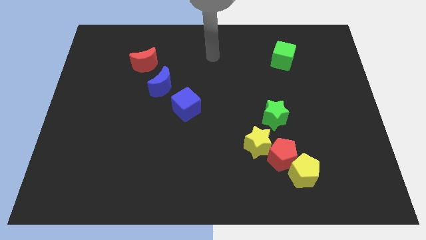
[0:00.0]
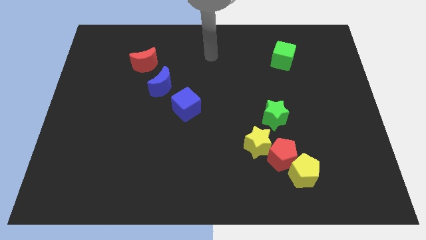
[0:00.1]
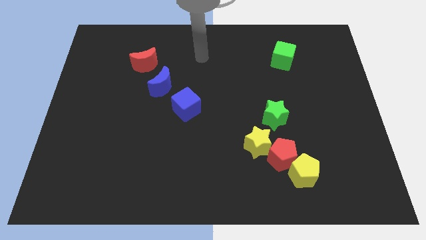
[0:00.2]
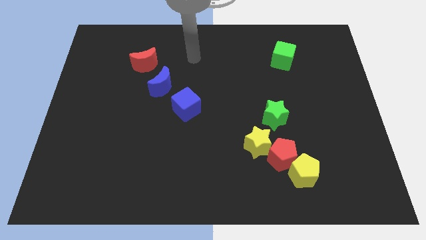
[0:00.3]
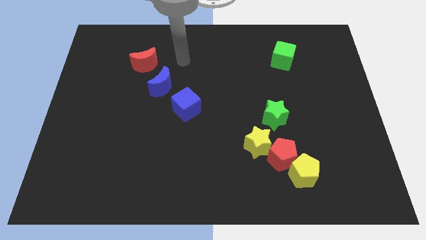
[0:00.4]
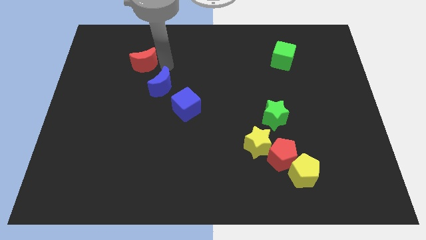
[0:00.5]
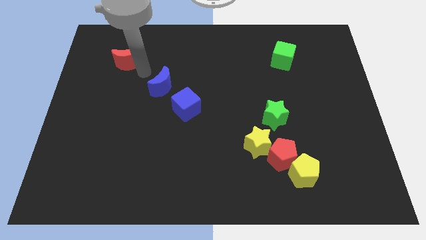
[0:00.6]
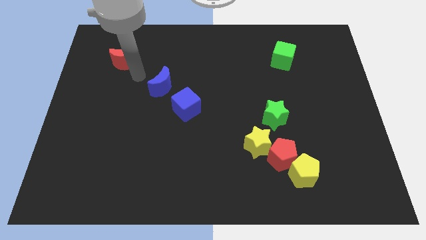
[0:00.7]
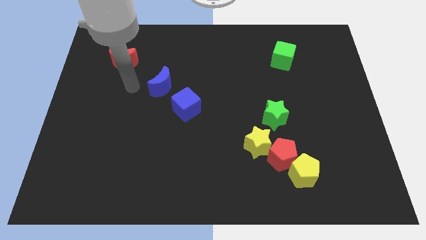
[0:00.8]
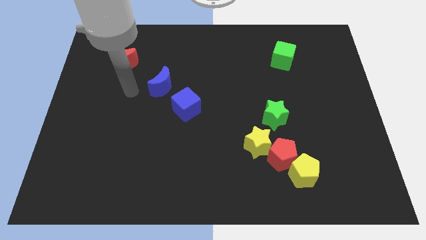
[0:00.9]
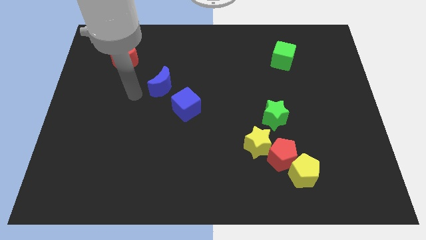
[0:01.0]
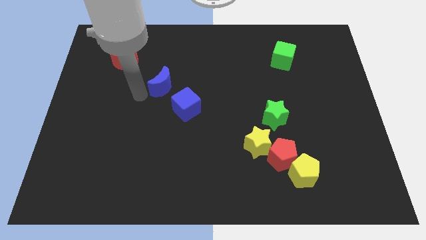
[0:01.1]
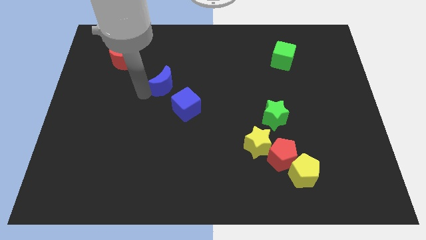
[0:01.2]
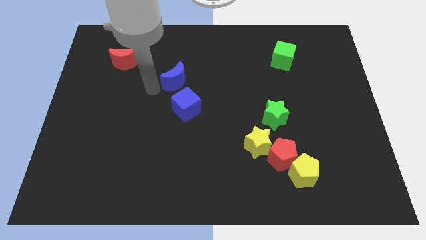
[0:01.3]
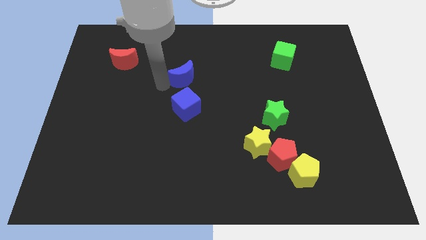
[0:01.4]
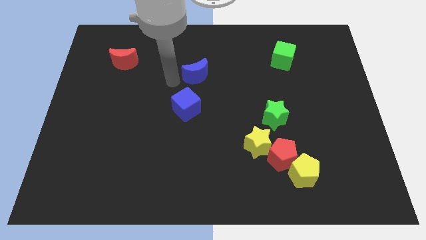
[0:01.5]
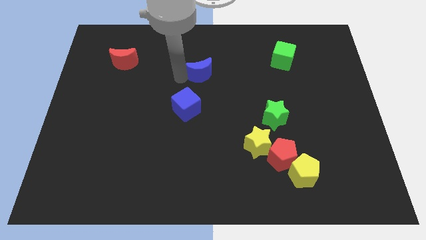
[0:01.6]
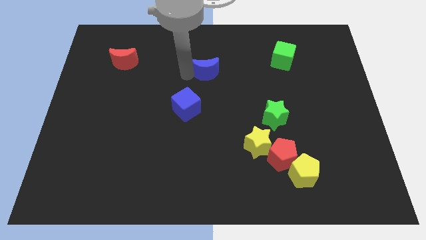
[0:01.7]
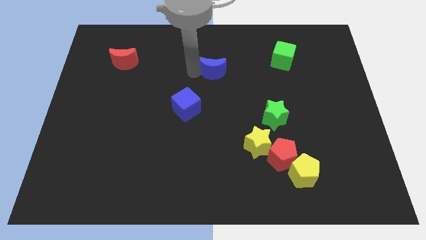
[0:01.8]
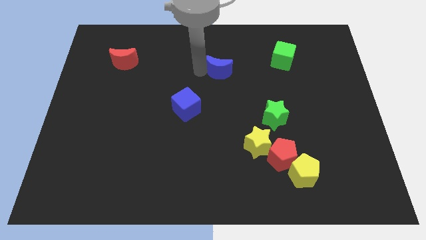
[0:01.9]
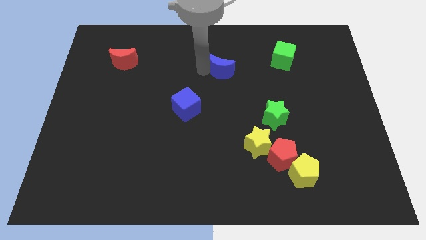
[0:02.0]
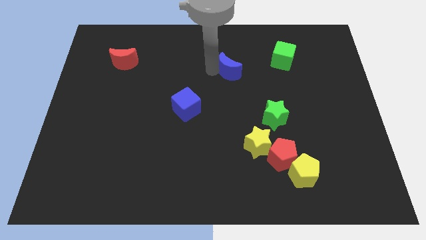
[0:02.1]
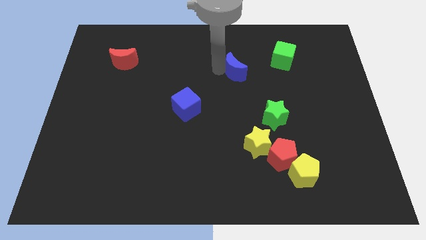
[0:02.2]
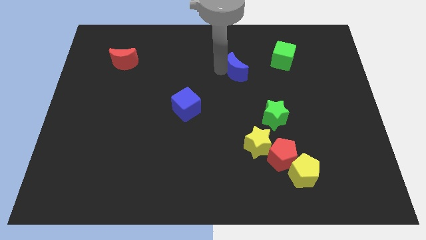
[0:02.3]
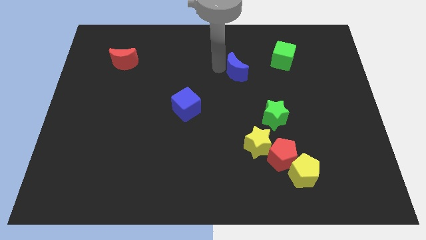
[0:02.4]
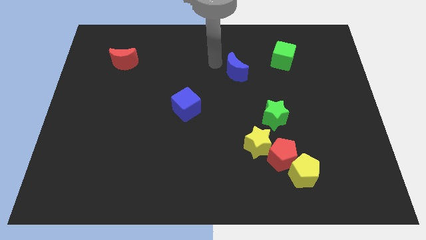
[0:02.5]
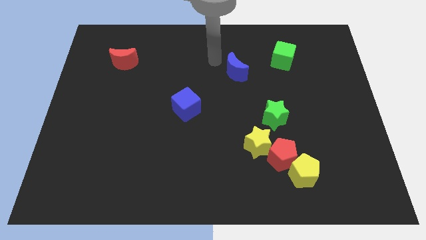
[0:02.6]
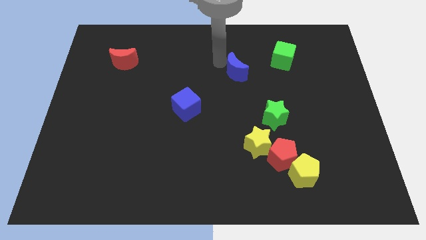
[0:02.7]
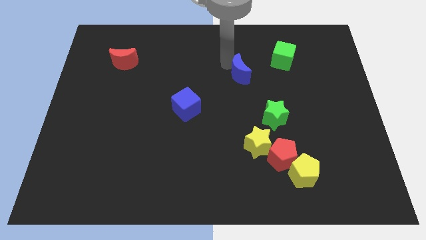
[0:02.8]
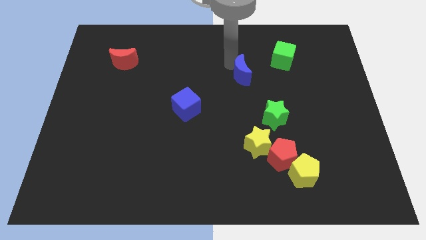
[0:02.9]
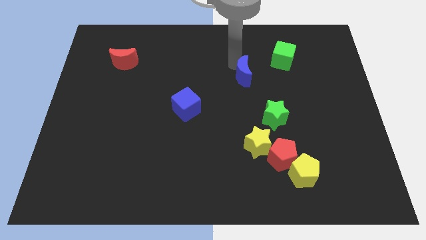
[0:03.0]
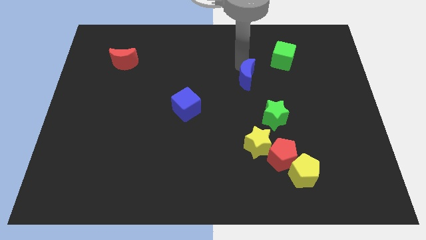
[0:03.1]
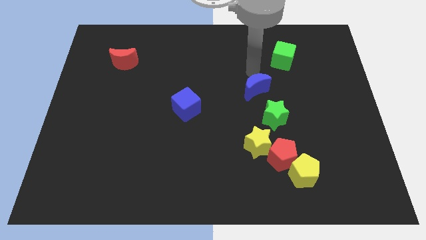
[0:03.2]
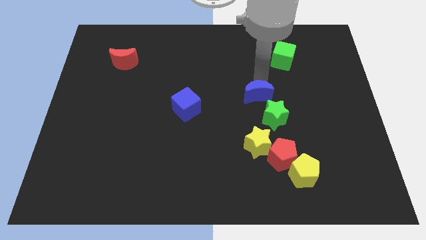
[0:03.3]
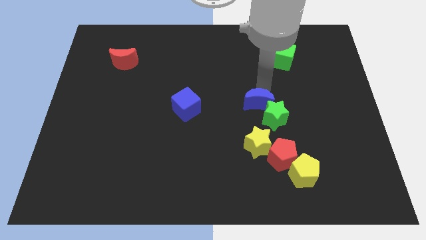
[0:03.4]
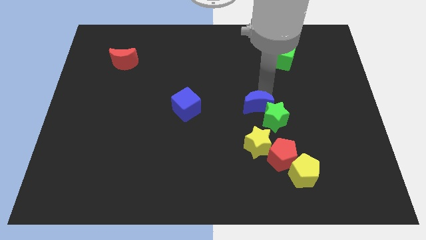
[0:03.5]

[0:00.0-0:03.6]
slide the blue moon towards the green star

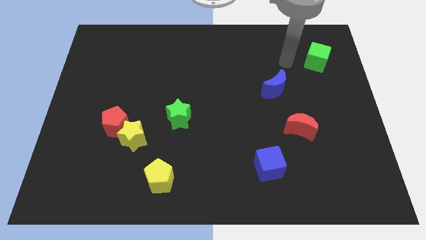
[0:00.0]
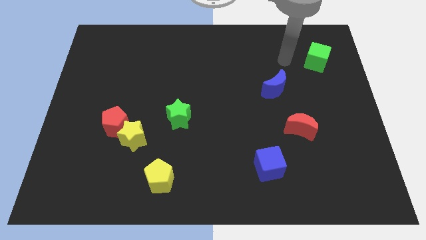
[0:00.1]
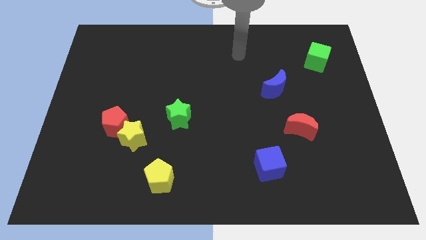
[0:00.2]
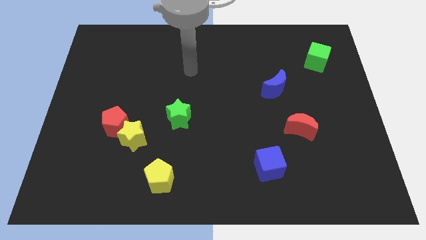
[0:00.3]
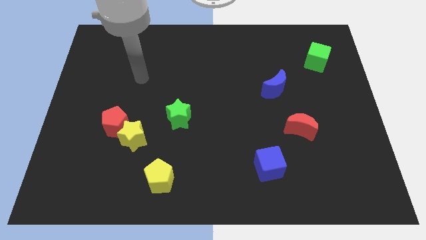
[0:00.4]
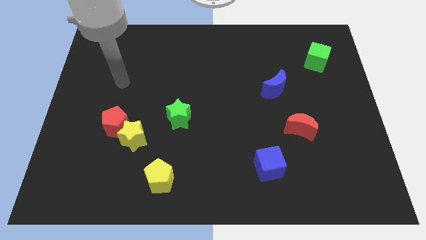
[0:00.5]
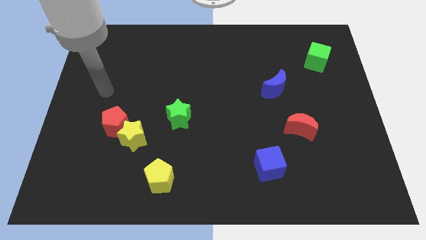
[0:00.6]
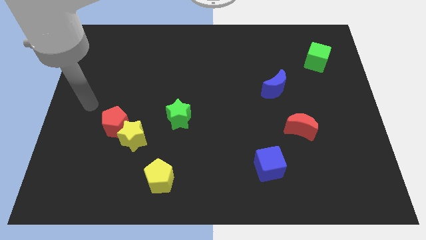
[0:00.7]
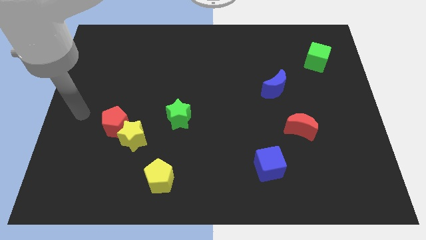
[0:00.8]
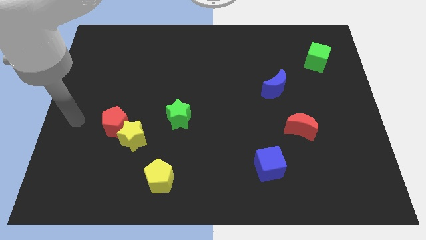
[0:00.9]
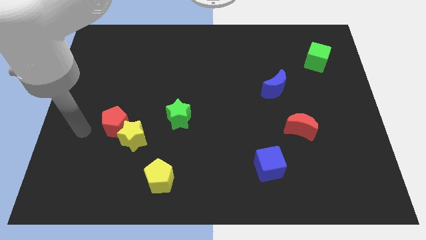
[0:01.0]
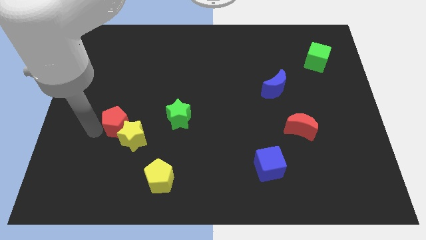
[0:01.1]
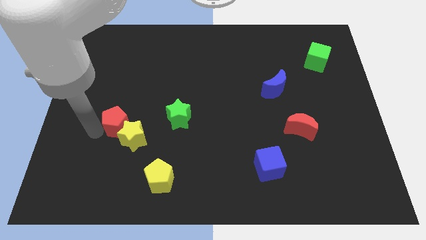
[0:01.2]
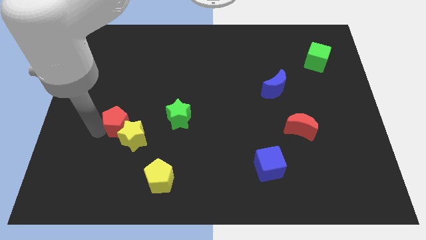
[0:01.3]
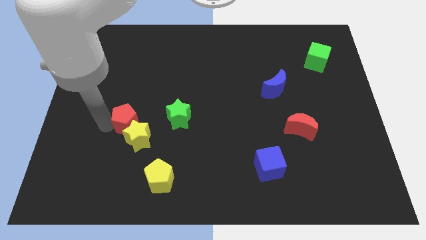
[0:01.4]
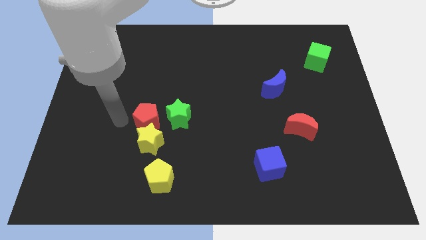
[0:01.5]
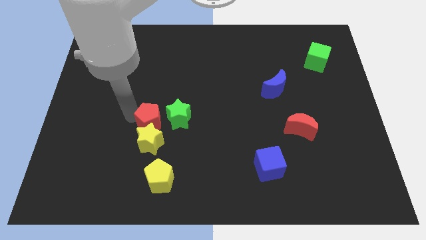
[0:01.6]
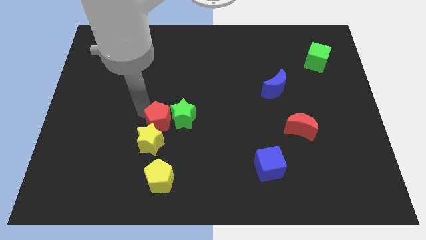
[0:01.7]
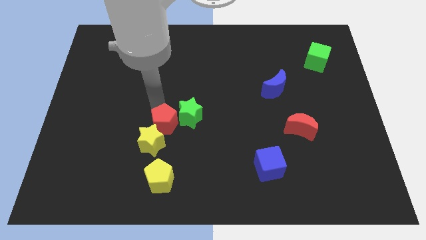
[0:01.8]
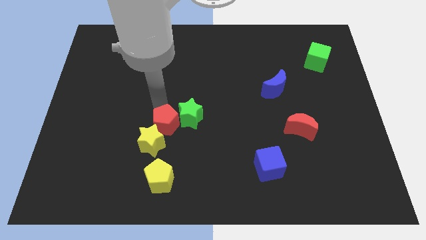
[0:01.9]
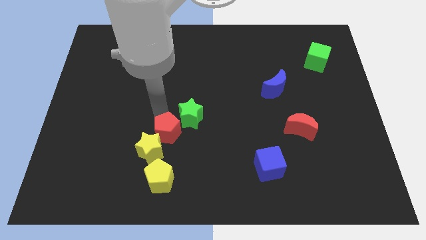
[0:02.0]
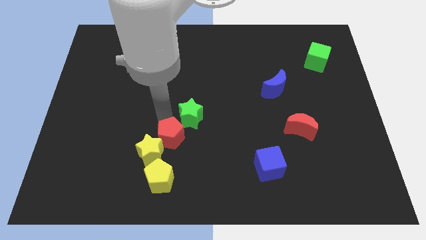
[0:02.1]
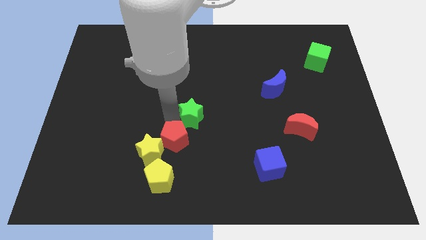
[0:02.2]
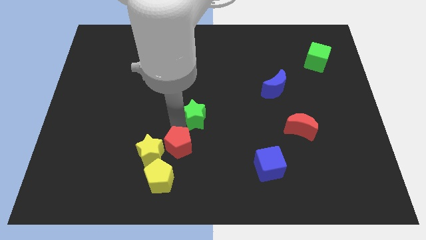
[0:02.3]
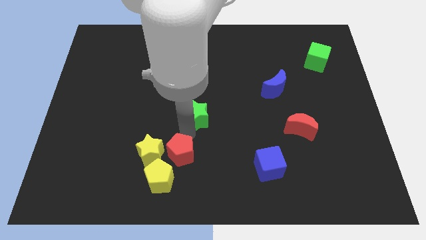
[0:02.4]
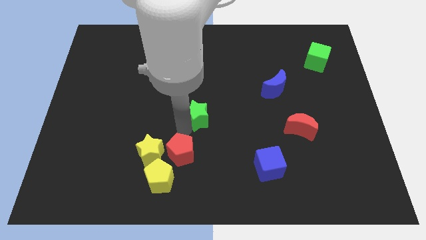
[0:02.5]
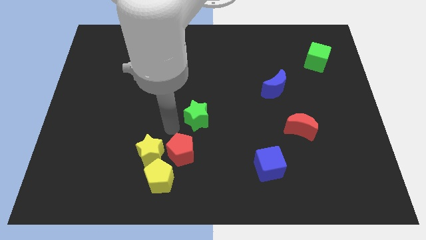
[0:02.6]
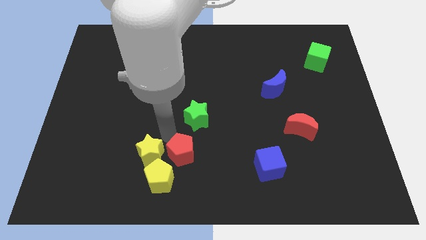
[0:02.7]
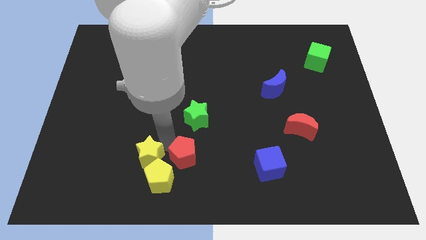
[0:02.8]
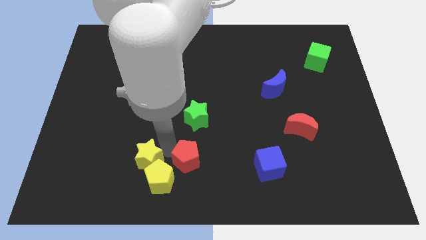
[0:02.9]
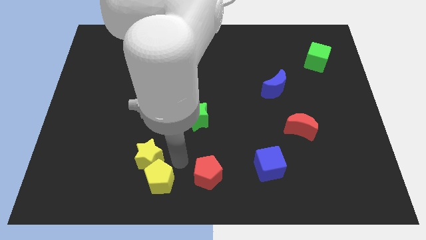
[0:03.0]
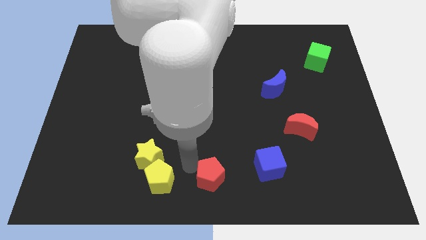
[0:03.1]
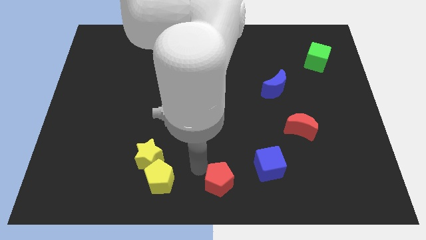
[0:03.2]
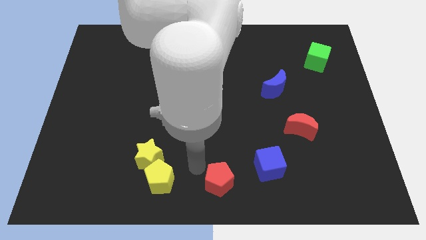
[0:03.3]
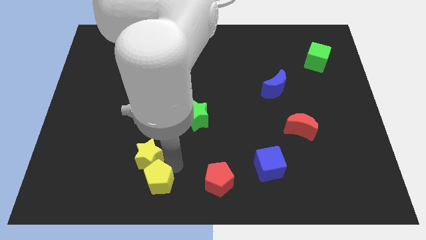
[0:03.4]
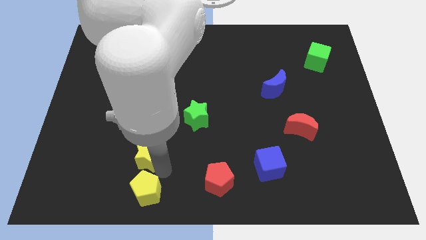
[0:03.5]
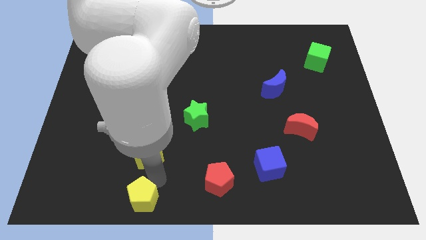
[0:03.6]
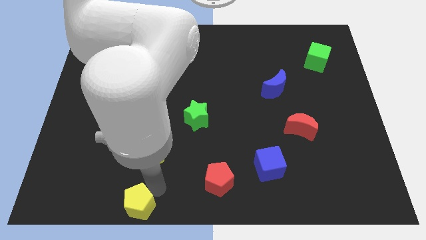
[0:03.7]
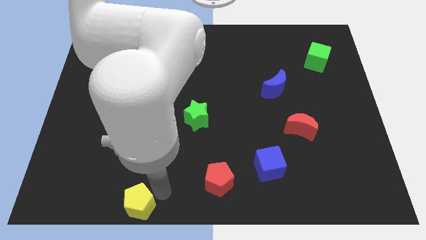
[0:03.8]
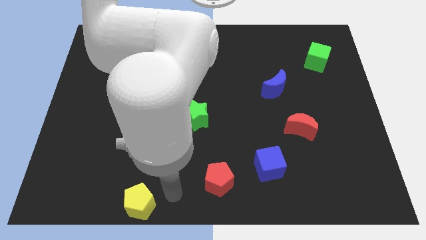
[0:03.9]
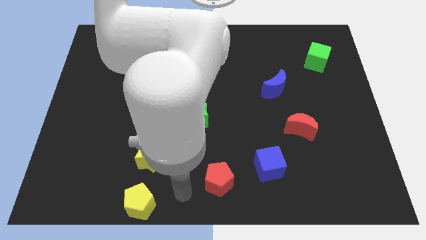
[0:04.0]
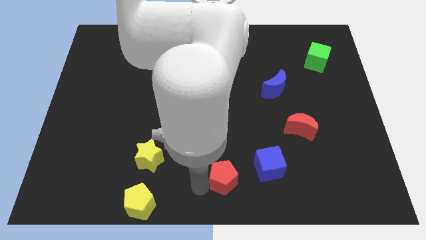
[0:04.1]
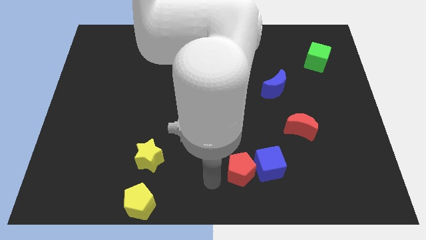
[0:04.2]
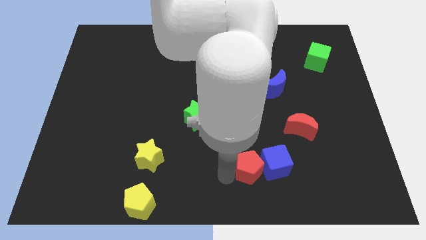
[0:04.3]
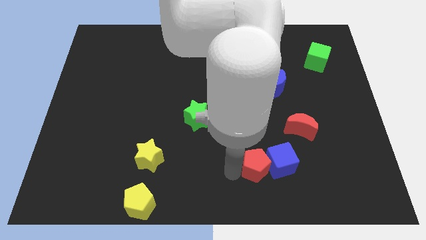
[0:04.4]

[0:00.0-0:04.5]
move the red pentagon towards the blue cube

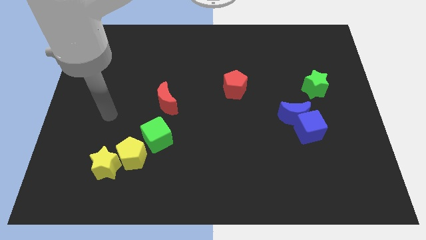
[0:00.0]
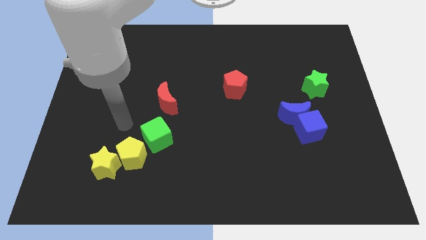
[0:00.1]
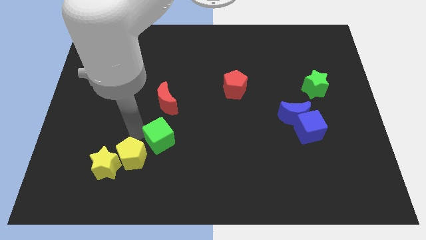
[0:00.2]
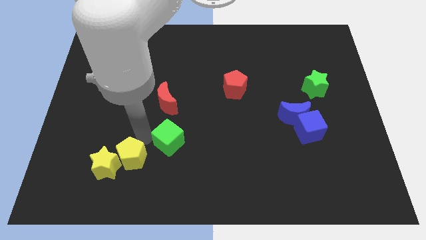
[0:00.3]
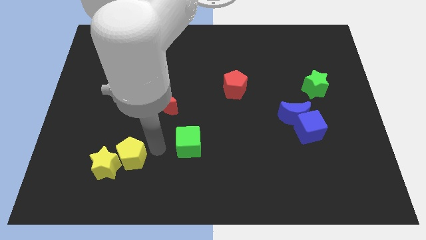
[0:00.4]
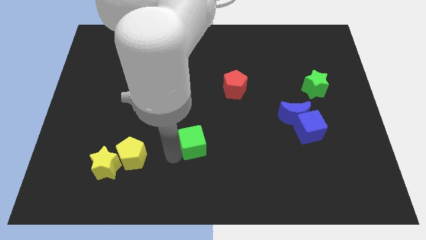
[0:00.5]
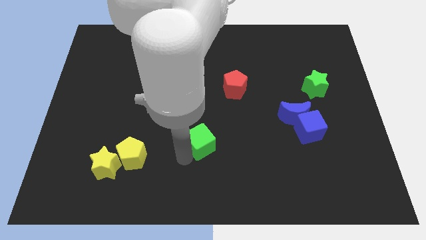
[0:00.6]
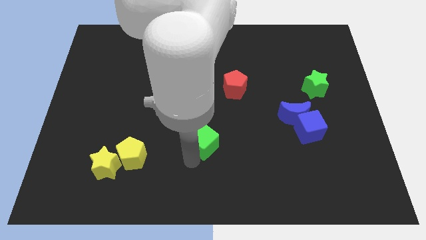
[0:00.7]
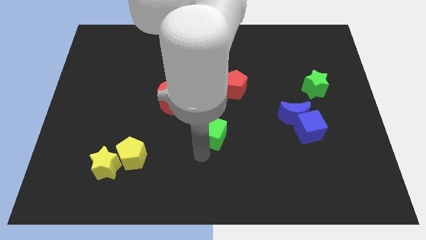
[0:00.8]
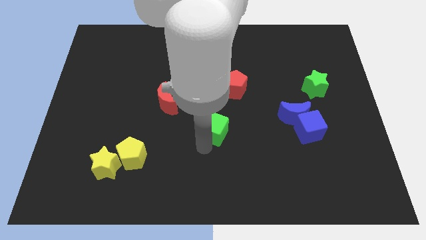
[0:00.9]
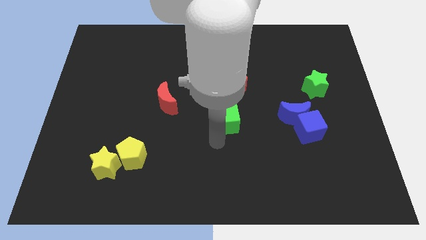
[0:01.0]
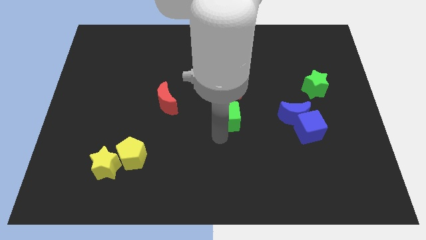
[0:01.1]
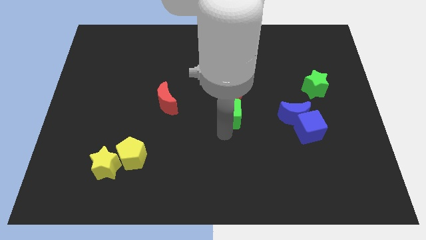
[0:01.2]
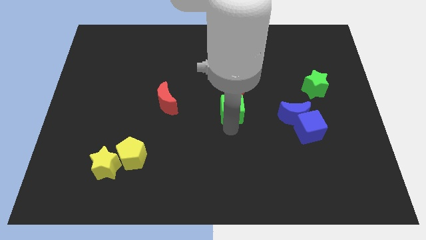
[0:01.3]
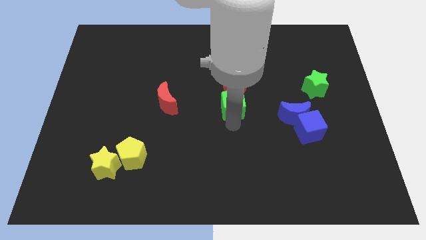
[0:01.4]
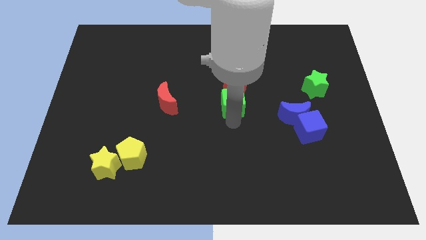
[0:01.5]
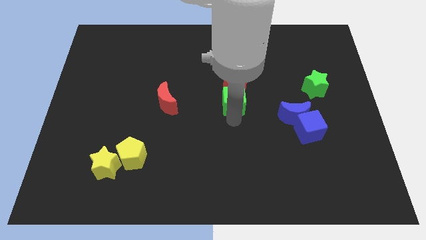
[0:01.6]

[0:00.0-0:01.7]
slide the green cube to the red pentagon
